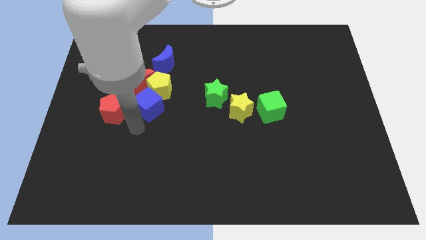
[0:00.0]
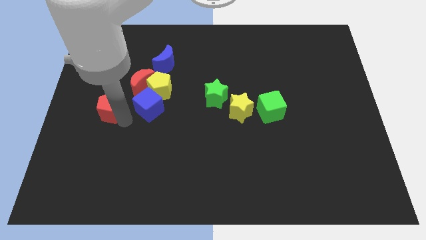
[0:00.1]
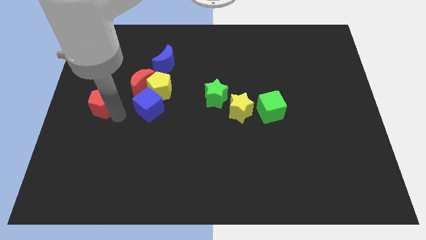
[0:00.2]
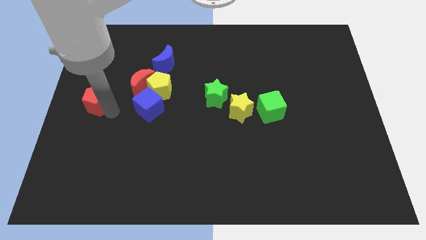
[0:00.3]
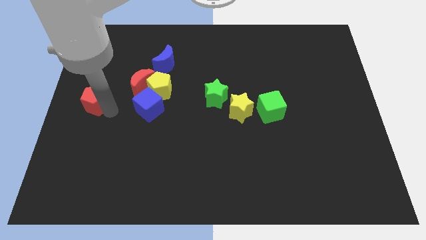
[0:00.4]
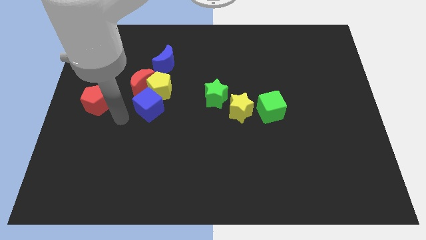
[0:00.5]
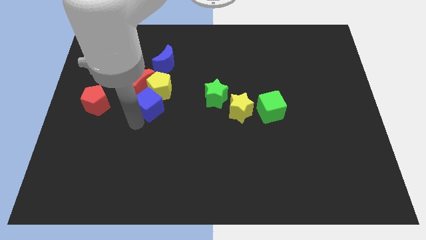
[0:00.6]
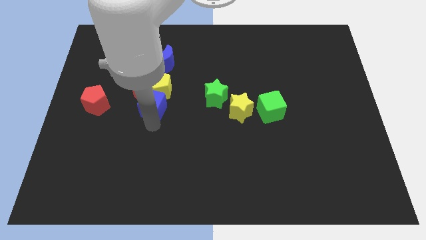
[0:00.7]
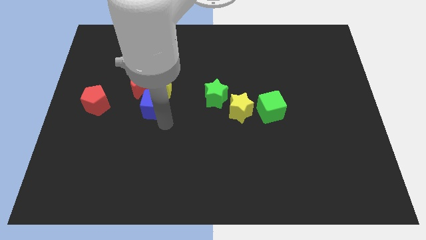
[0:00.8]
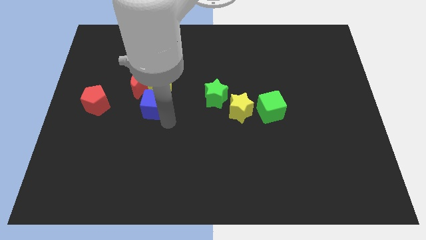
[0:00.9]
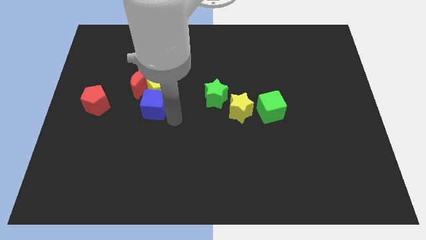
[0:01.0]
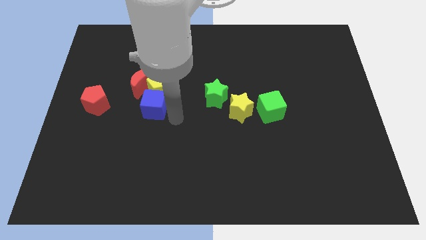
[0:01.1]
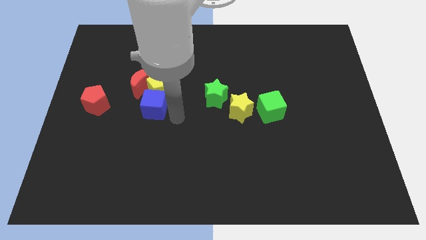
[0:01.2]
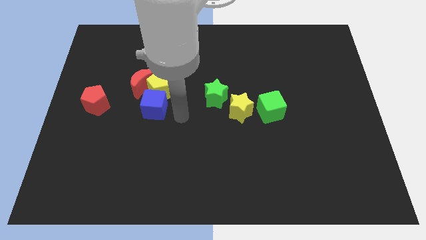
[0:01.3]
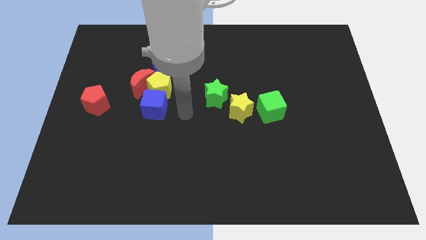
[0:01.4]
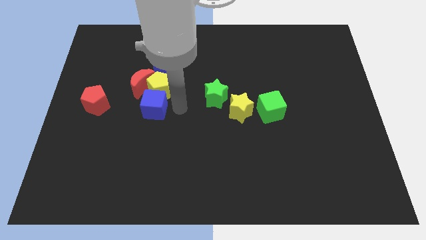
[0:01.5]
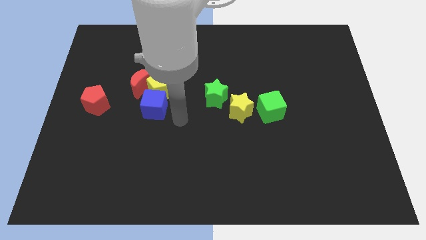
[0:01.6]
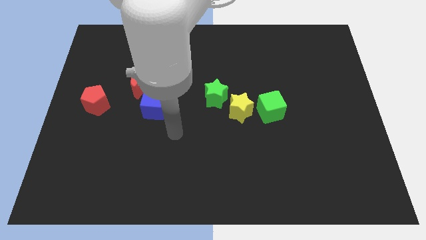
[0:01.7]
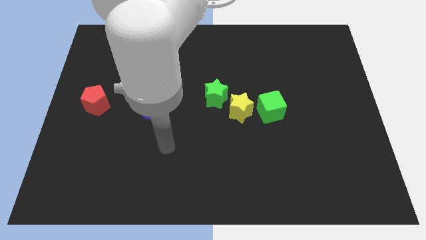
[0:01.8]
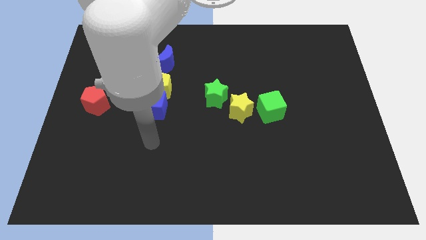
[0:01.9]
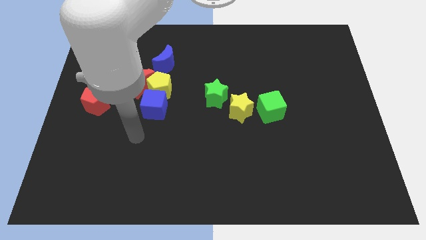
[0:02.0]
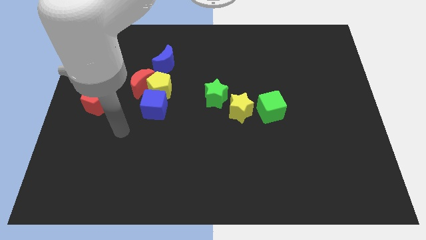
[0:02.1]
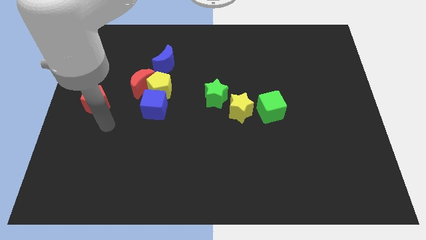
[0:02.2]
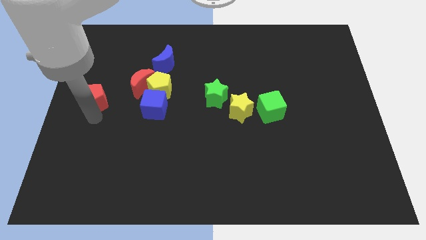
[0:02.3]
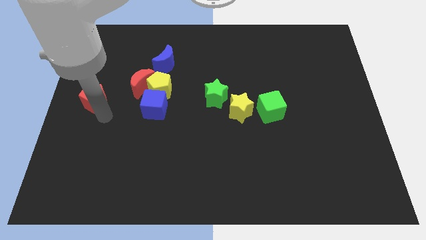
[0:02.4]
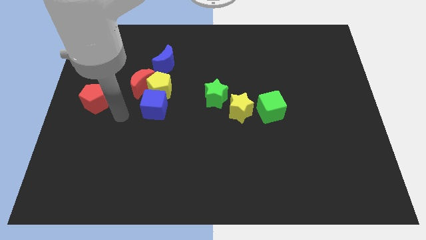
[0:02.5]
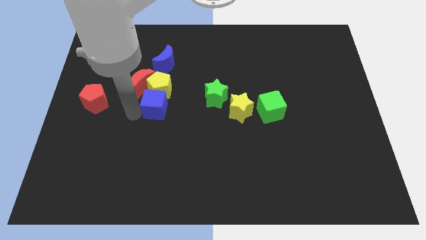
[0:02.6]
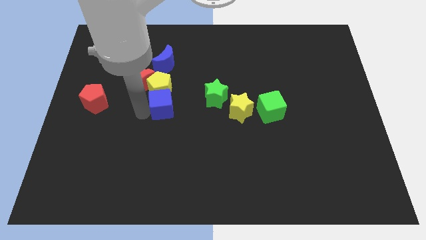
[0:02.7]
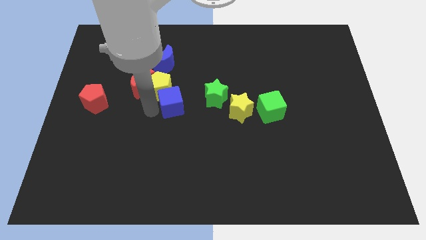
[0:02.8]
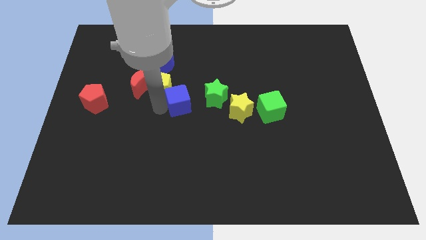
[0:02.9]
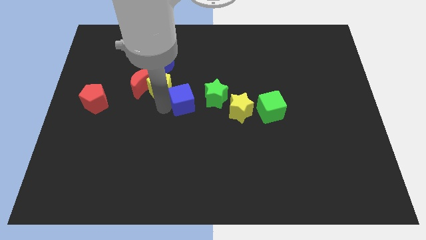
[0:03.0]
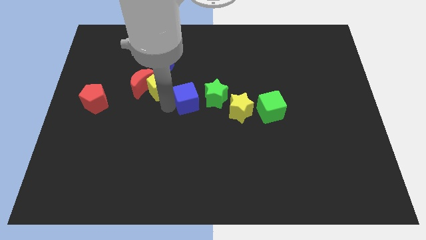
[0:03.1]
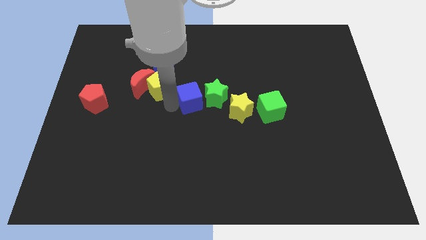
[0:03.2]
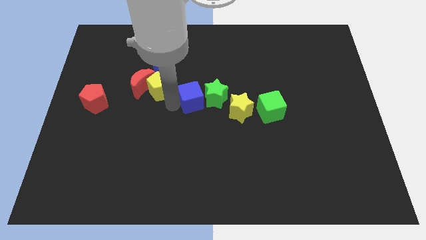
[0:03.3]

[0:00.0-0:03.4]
separate red pentagon and blue cube

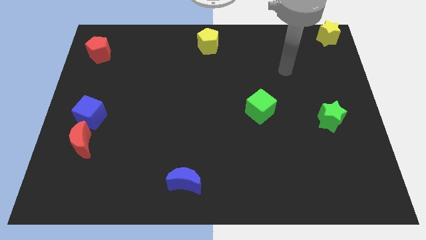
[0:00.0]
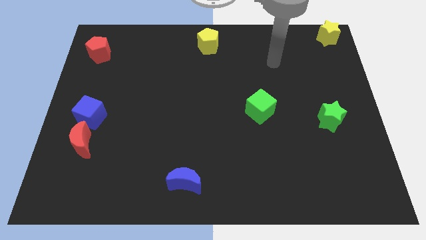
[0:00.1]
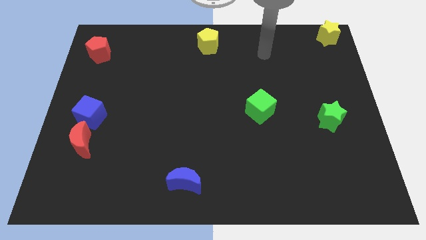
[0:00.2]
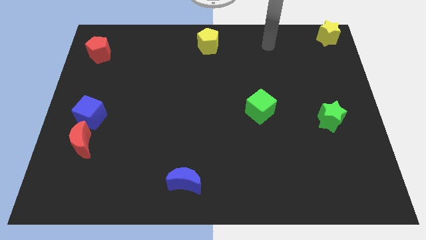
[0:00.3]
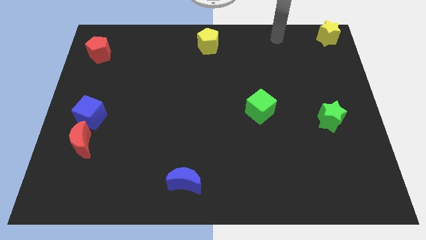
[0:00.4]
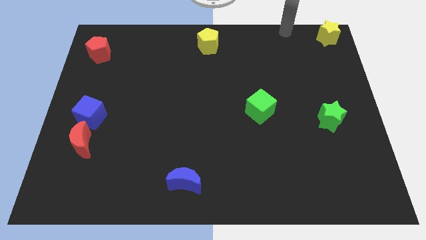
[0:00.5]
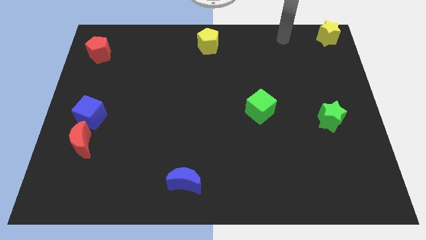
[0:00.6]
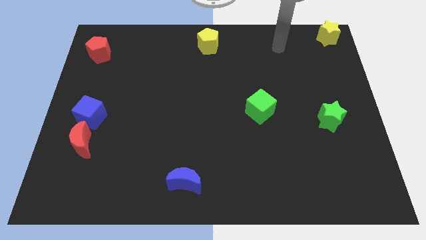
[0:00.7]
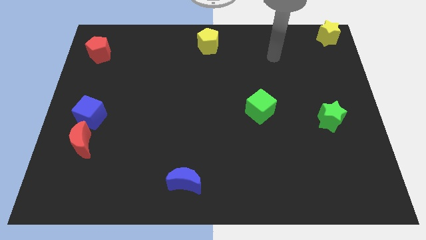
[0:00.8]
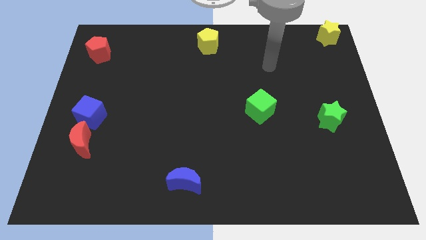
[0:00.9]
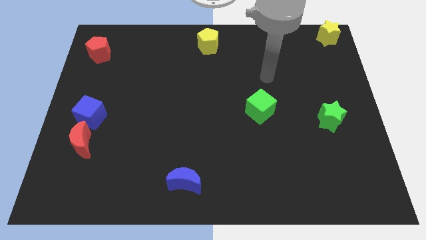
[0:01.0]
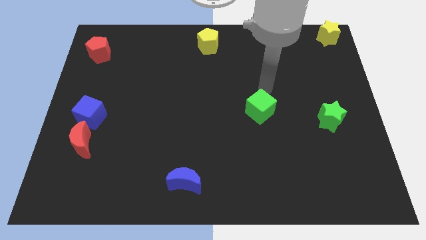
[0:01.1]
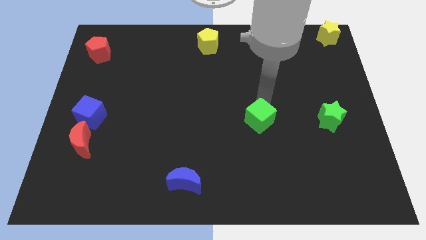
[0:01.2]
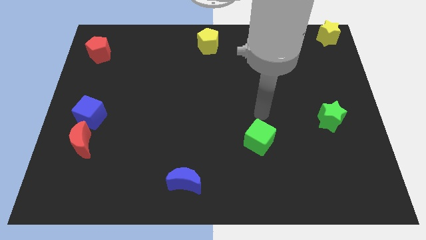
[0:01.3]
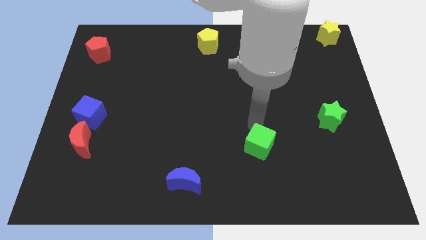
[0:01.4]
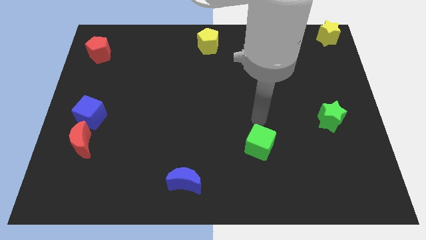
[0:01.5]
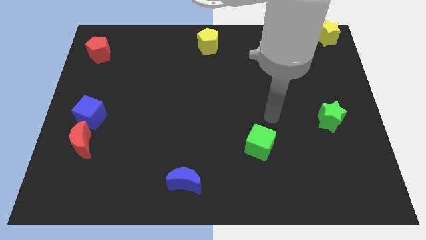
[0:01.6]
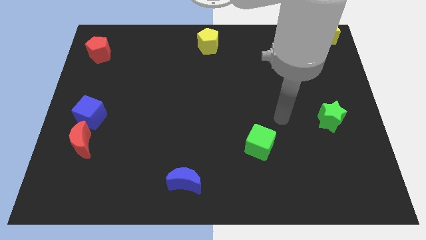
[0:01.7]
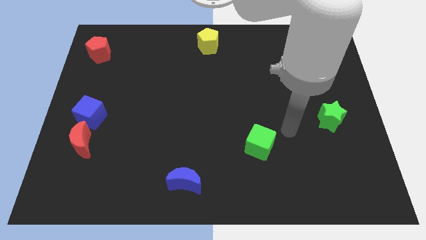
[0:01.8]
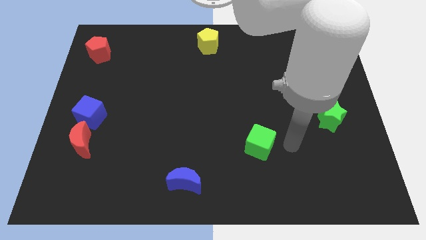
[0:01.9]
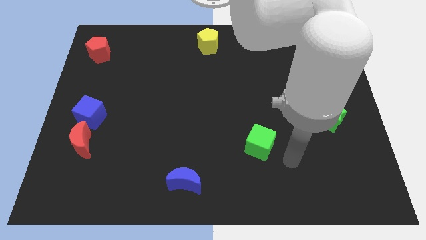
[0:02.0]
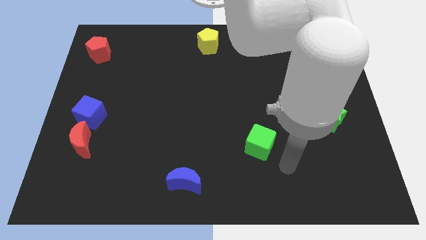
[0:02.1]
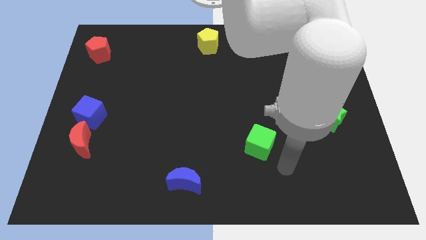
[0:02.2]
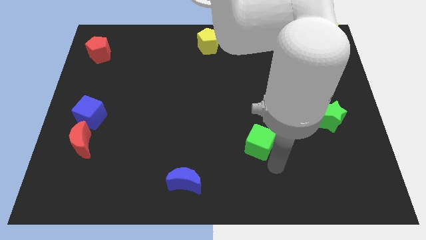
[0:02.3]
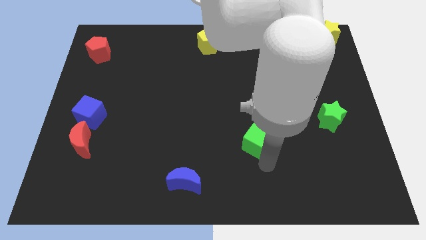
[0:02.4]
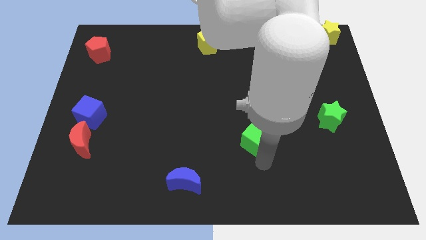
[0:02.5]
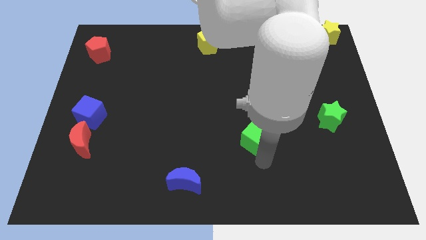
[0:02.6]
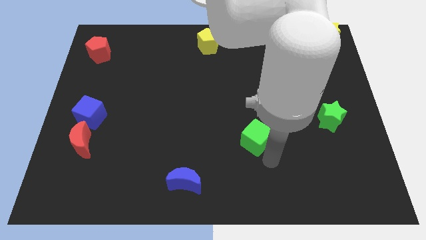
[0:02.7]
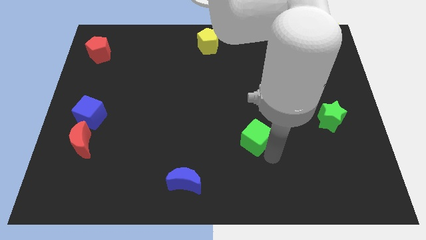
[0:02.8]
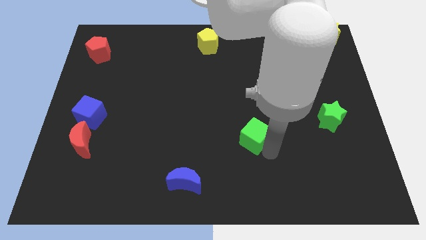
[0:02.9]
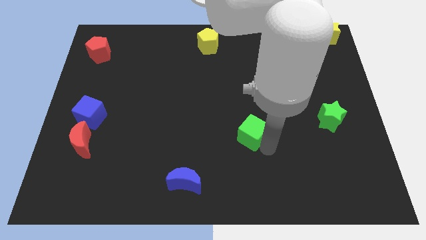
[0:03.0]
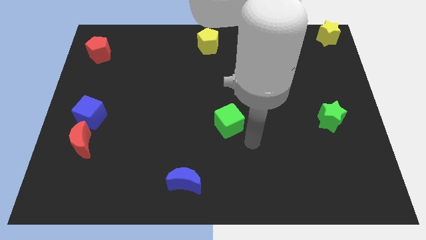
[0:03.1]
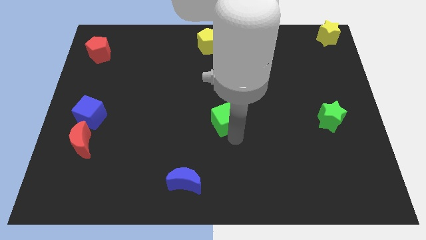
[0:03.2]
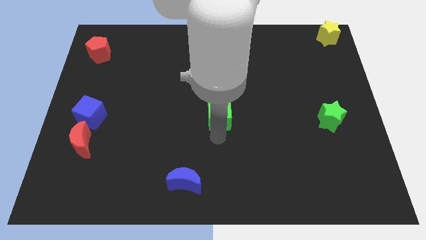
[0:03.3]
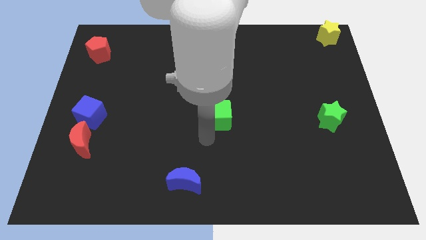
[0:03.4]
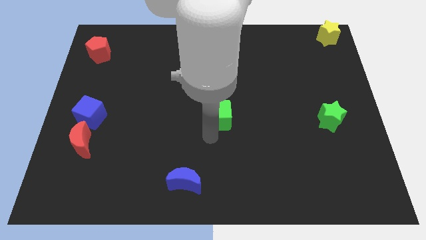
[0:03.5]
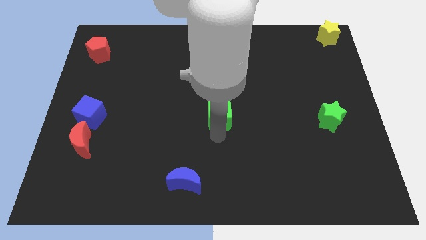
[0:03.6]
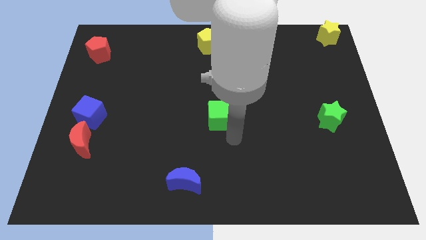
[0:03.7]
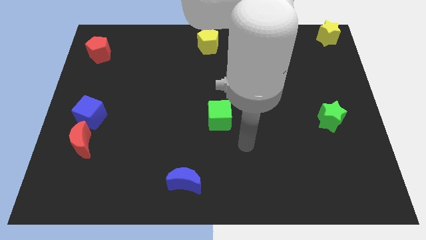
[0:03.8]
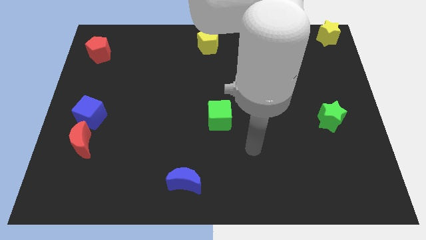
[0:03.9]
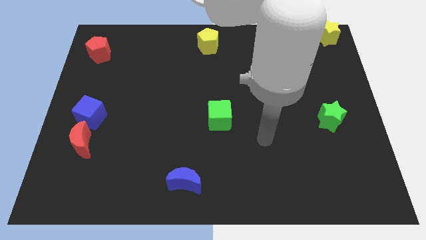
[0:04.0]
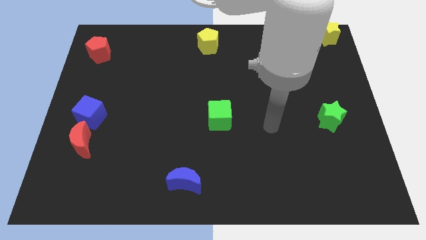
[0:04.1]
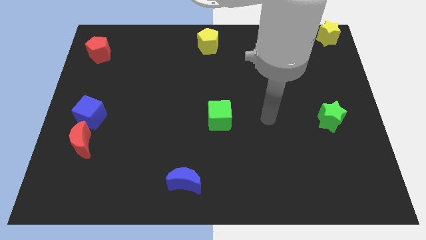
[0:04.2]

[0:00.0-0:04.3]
push the green cube to the left side of the board

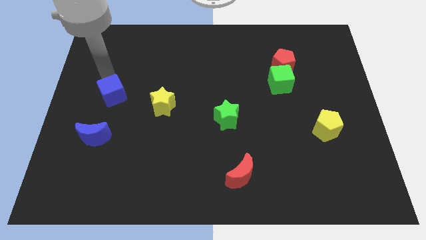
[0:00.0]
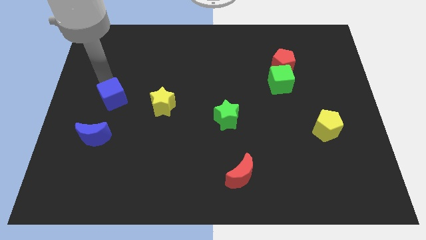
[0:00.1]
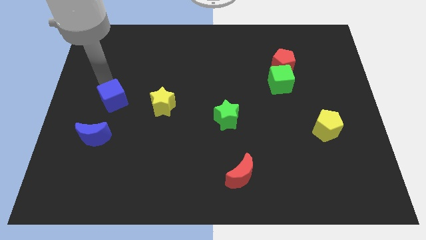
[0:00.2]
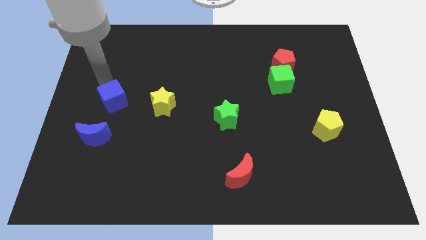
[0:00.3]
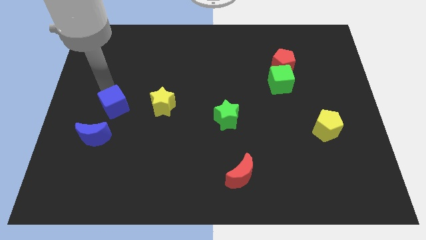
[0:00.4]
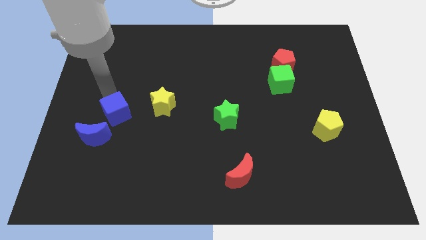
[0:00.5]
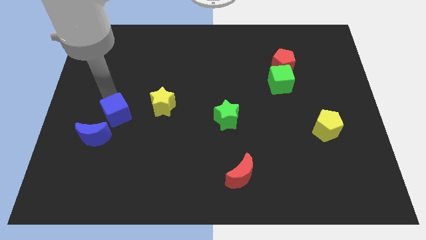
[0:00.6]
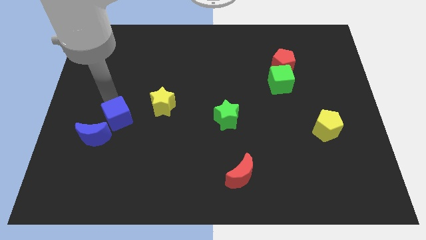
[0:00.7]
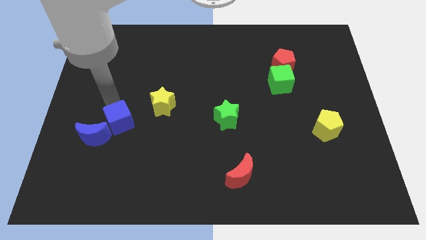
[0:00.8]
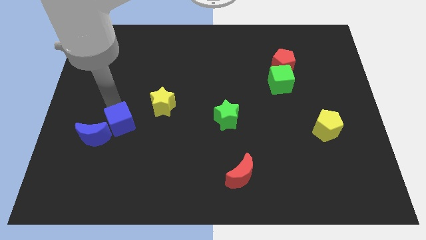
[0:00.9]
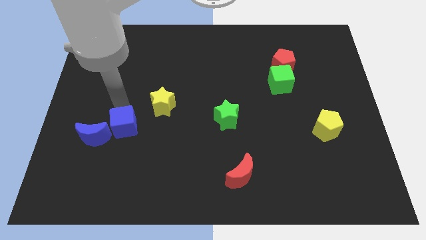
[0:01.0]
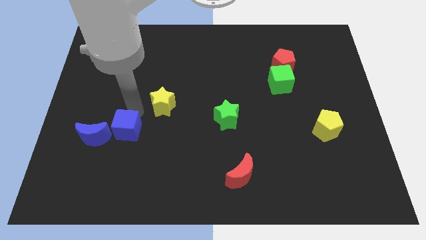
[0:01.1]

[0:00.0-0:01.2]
place the blue cube to the right side of blue moon

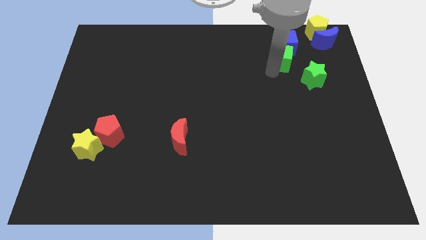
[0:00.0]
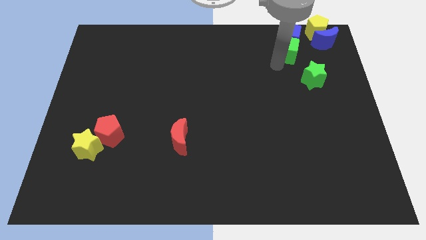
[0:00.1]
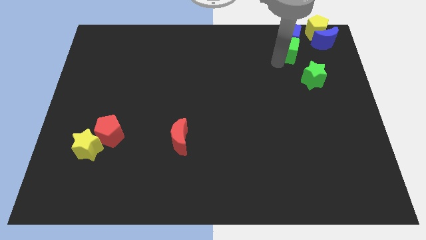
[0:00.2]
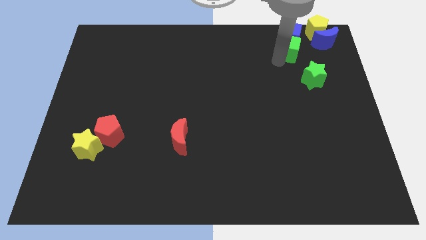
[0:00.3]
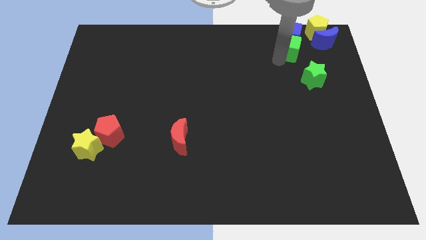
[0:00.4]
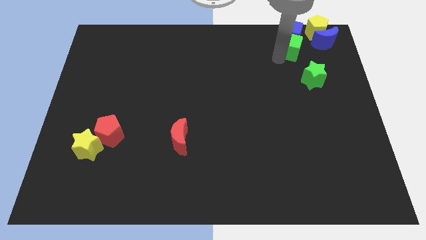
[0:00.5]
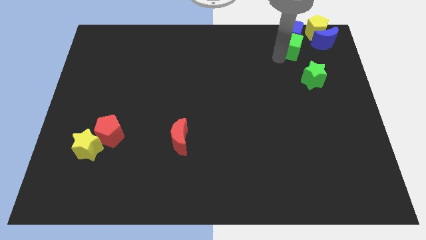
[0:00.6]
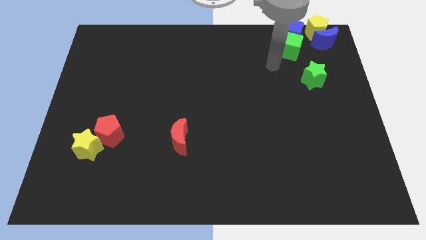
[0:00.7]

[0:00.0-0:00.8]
push the blue cube with green cube to the top right
